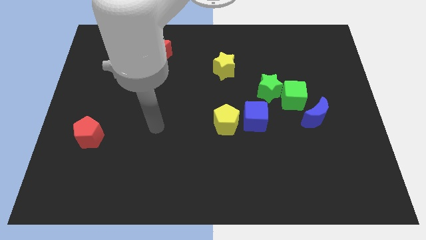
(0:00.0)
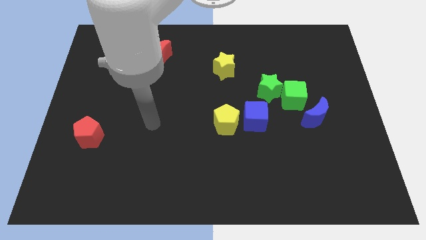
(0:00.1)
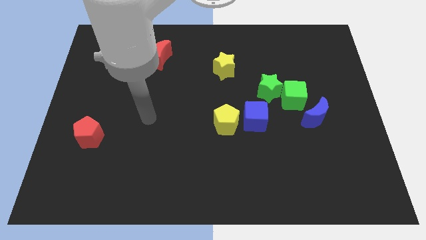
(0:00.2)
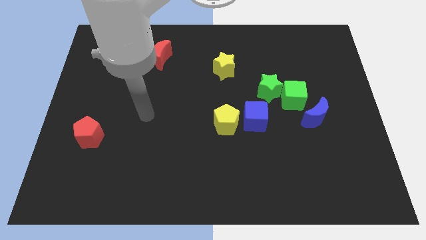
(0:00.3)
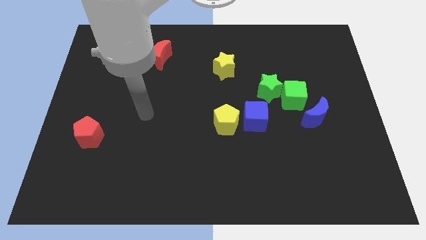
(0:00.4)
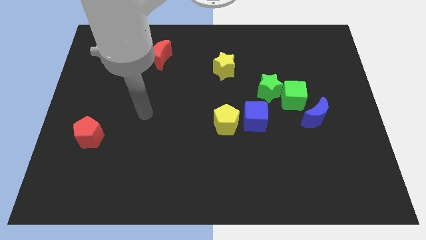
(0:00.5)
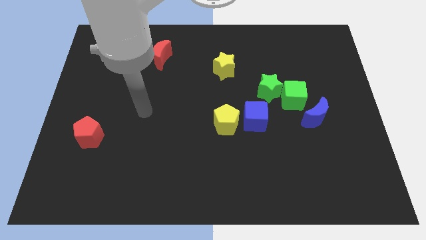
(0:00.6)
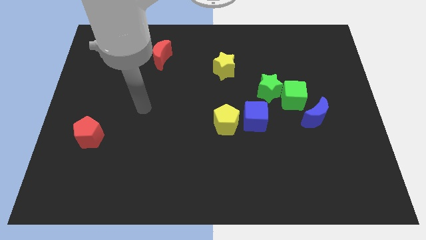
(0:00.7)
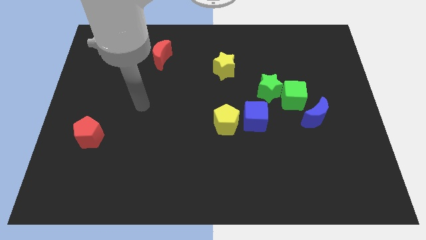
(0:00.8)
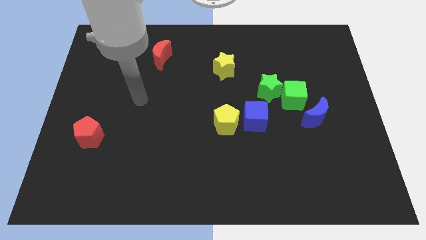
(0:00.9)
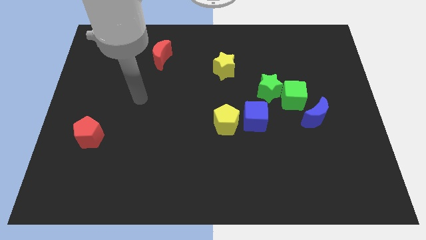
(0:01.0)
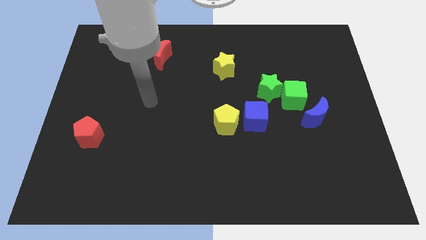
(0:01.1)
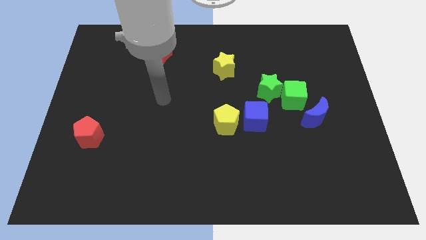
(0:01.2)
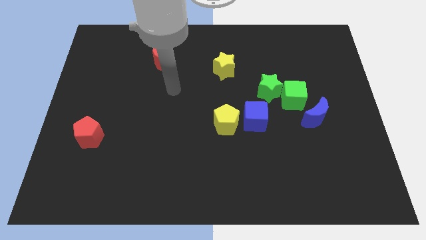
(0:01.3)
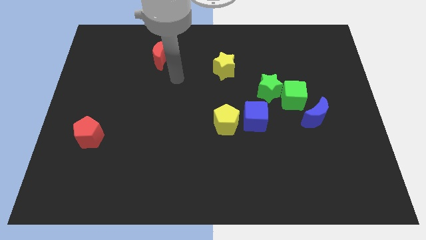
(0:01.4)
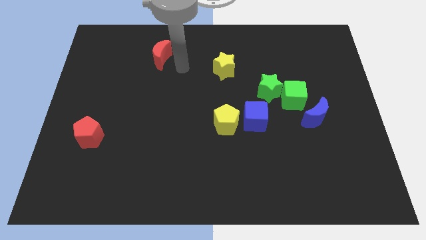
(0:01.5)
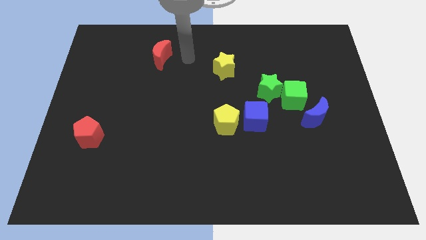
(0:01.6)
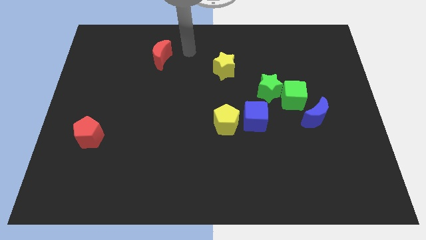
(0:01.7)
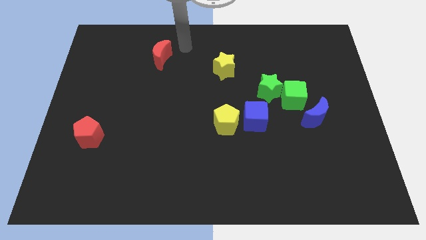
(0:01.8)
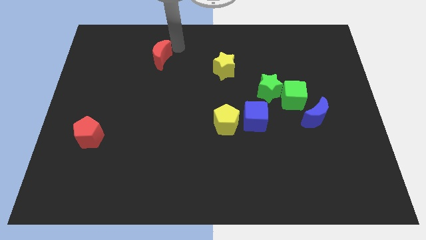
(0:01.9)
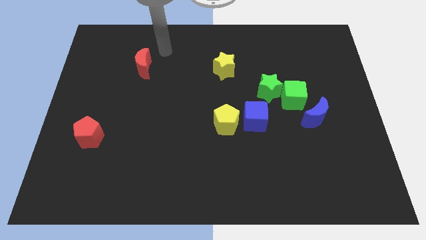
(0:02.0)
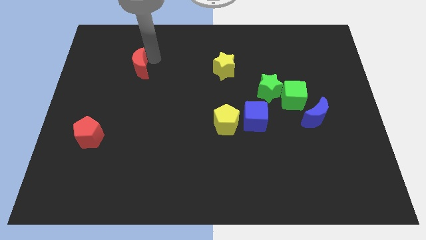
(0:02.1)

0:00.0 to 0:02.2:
move the arm towards the red crescent

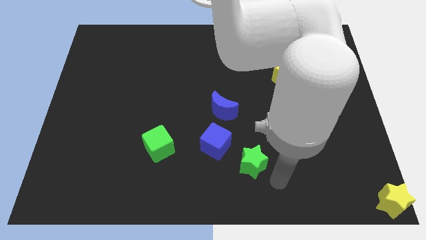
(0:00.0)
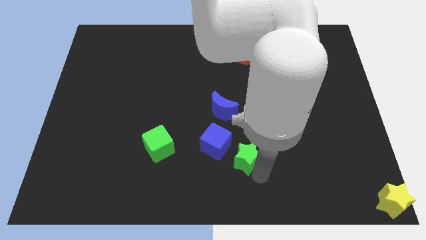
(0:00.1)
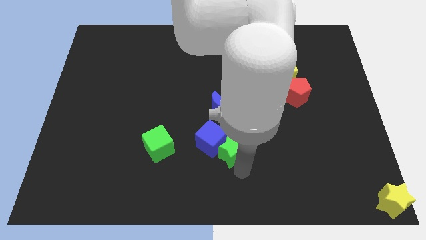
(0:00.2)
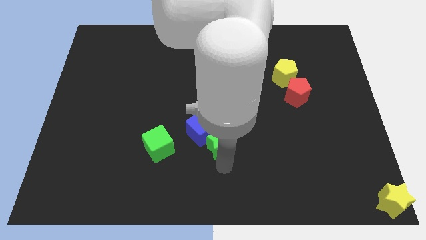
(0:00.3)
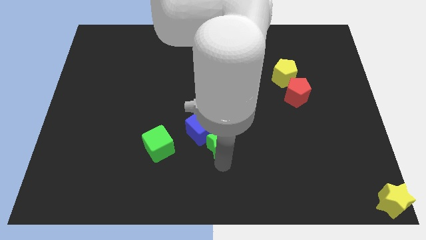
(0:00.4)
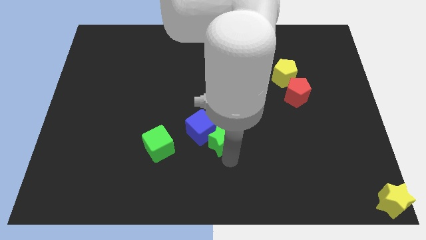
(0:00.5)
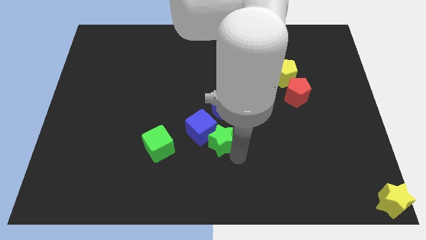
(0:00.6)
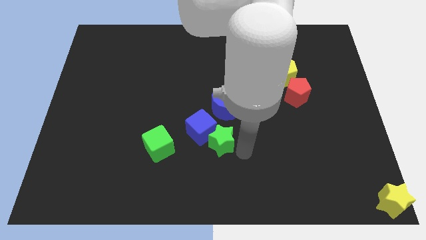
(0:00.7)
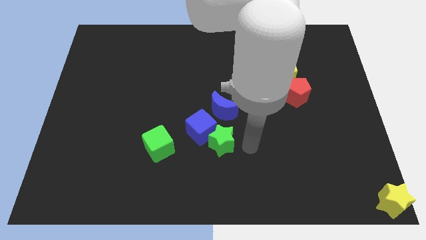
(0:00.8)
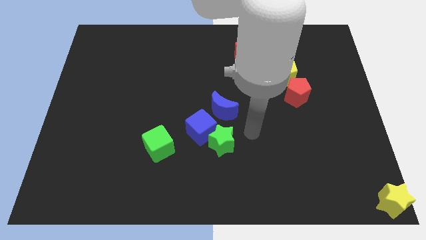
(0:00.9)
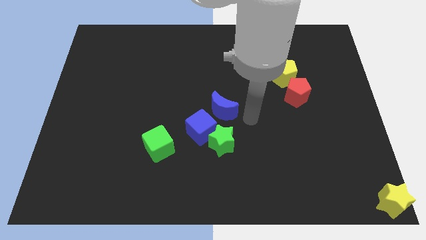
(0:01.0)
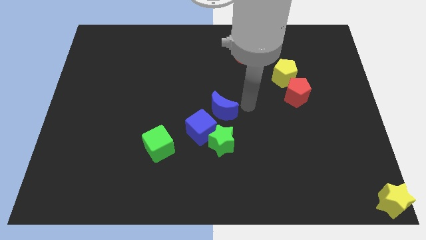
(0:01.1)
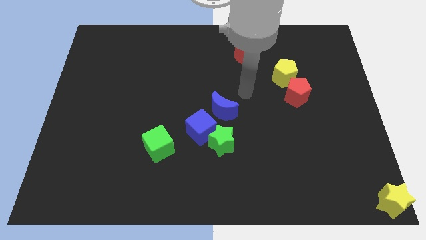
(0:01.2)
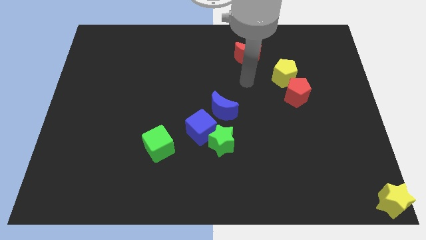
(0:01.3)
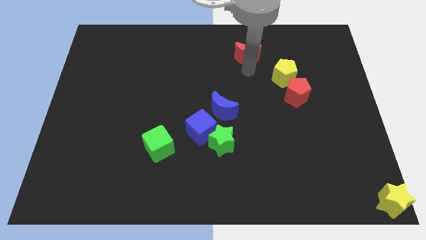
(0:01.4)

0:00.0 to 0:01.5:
push the green star into the blue cube

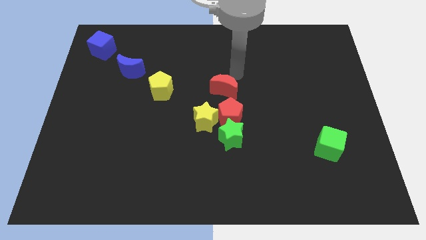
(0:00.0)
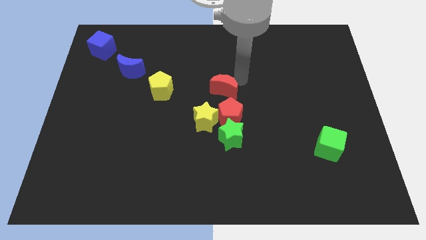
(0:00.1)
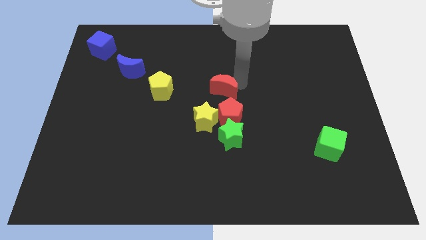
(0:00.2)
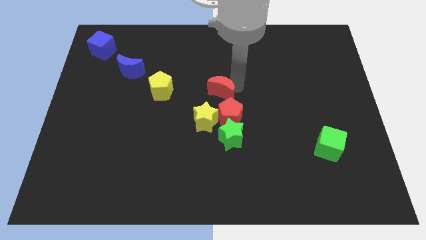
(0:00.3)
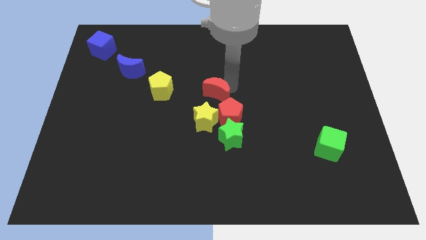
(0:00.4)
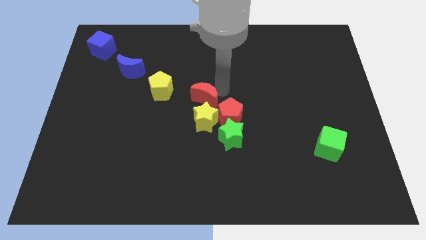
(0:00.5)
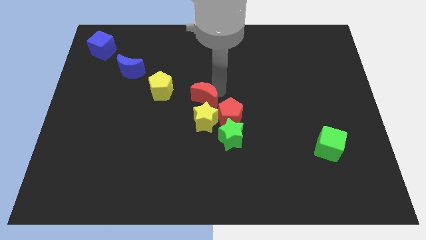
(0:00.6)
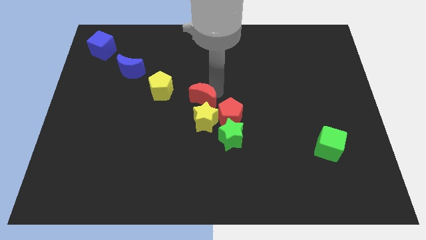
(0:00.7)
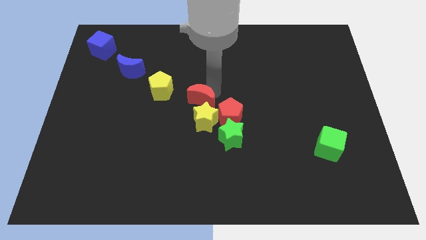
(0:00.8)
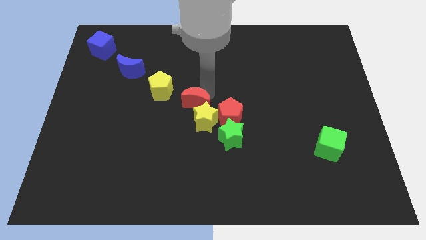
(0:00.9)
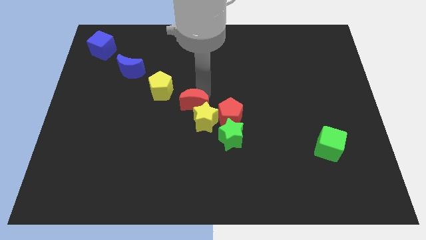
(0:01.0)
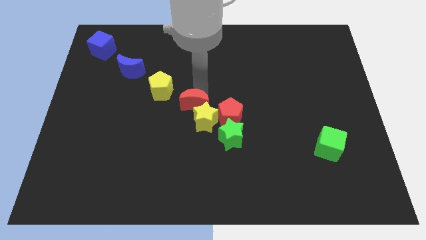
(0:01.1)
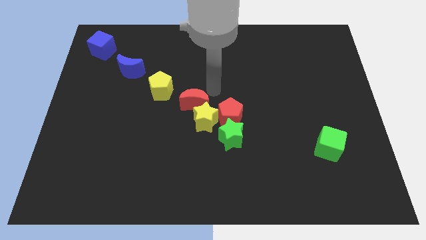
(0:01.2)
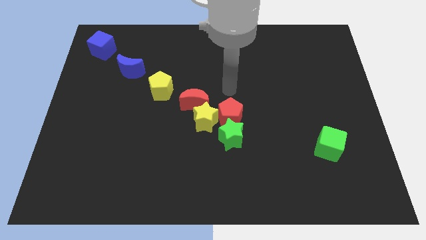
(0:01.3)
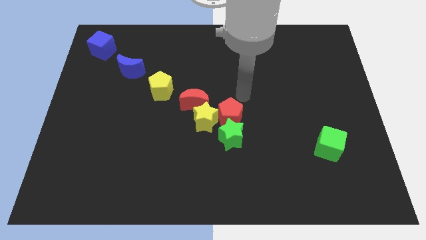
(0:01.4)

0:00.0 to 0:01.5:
move red crescent into the top of yellow star

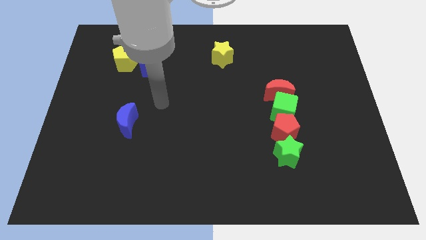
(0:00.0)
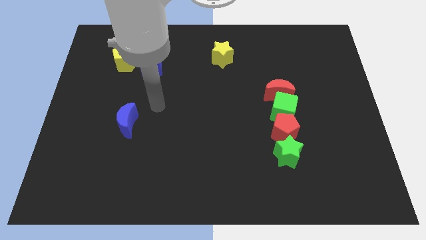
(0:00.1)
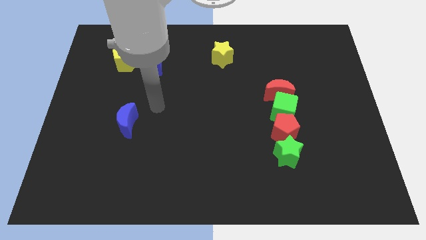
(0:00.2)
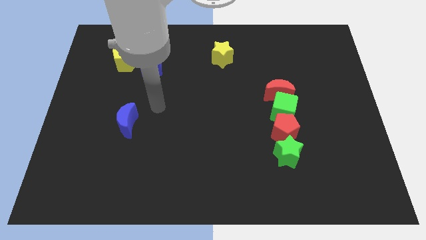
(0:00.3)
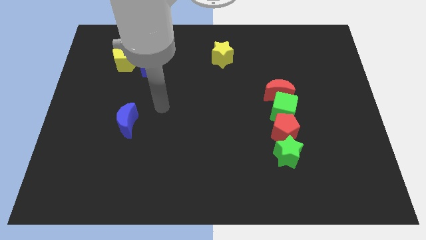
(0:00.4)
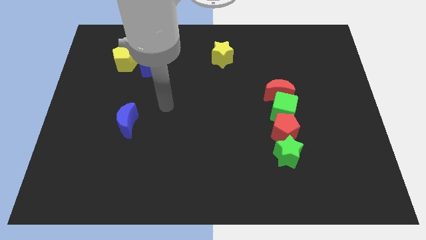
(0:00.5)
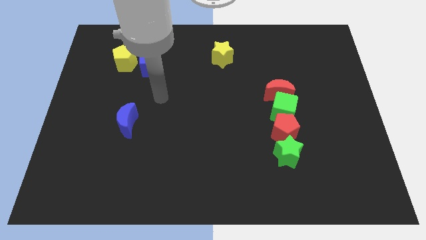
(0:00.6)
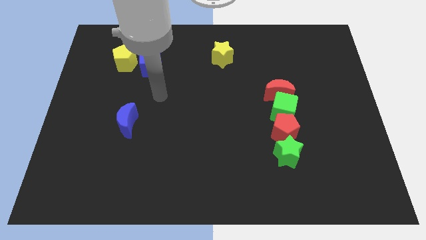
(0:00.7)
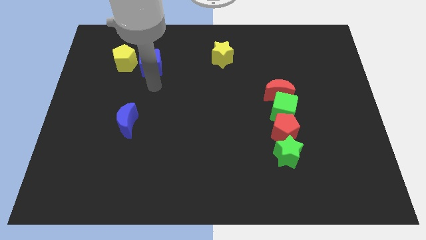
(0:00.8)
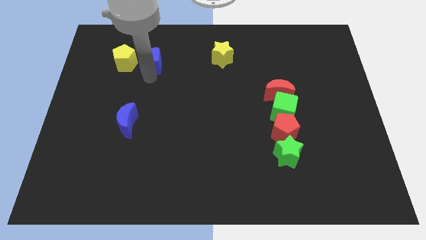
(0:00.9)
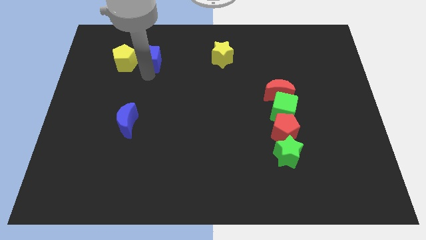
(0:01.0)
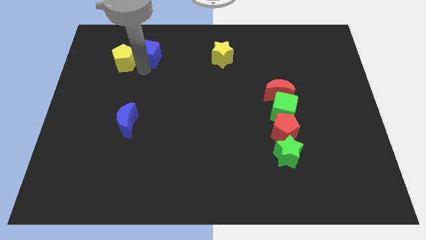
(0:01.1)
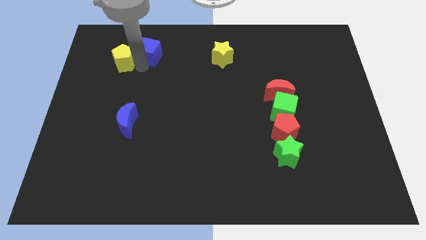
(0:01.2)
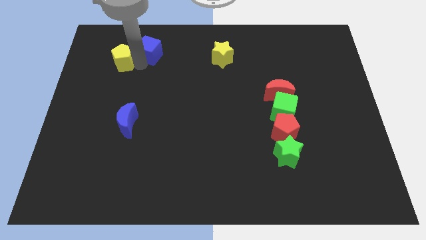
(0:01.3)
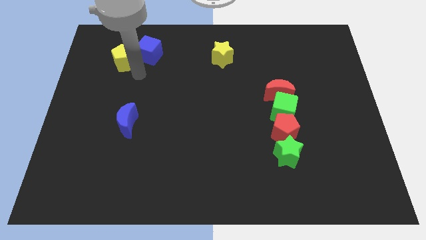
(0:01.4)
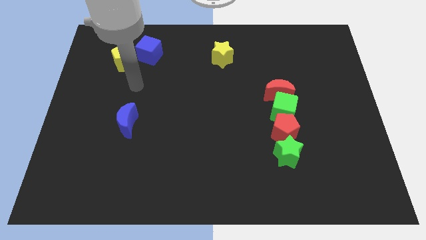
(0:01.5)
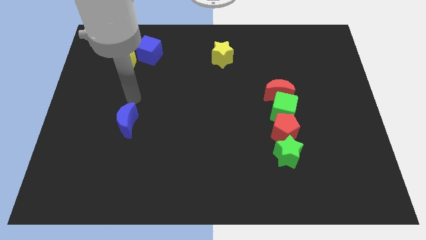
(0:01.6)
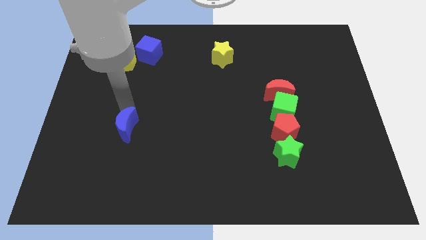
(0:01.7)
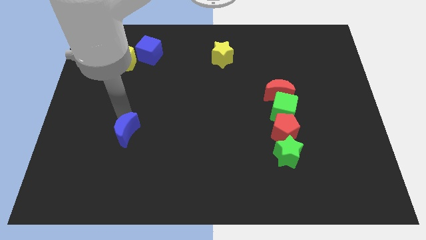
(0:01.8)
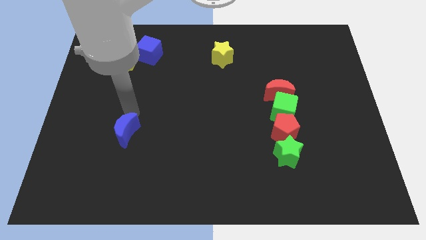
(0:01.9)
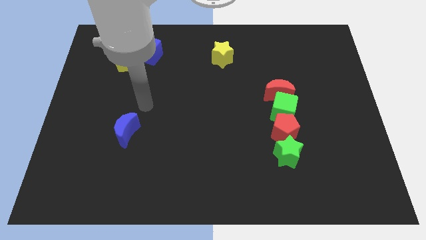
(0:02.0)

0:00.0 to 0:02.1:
push the blue cube slightly upwards

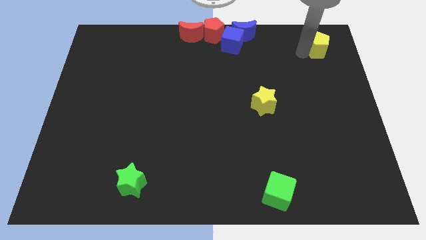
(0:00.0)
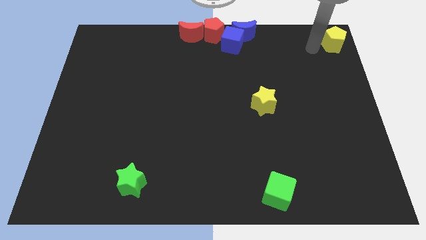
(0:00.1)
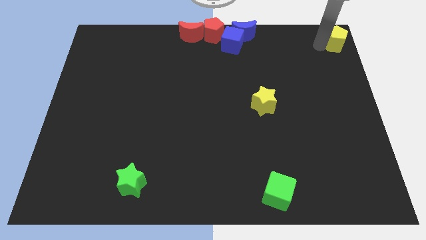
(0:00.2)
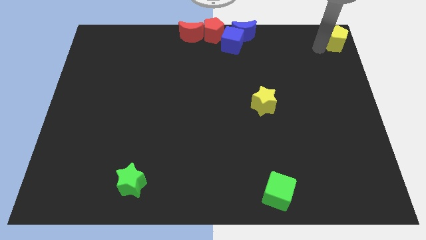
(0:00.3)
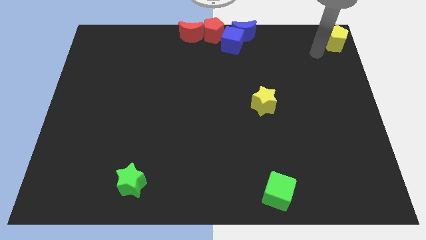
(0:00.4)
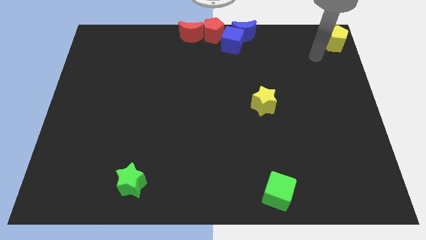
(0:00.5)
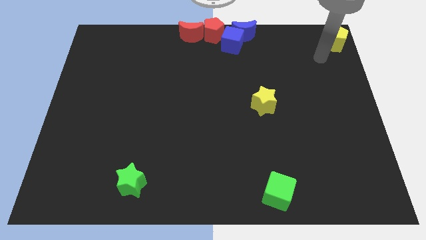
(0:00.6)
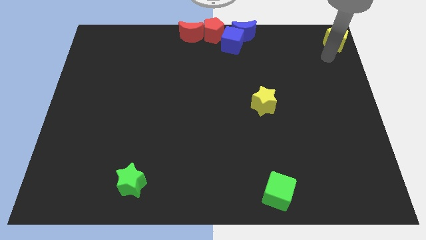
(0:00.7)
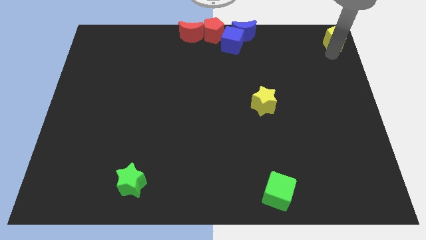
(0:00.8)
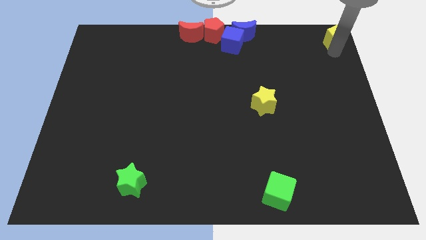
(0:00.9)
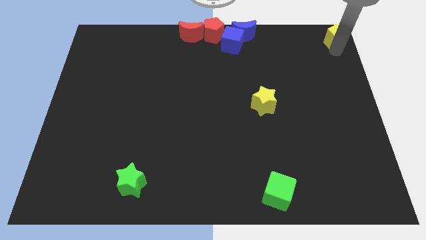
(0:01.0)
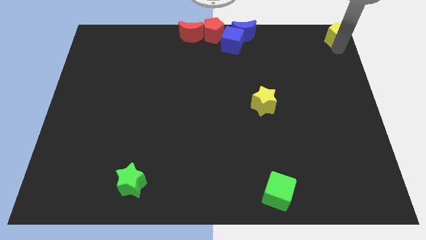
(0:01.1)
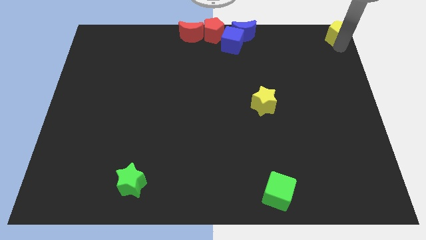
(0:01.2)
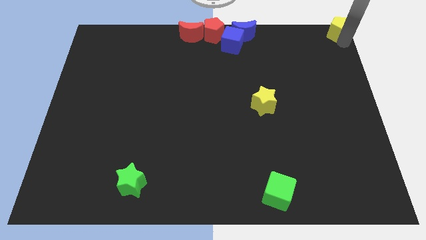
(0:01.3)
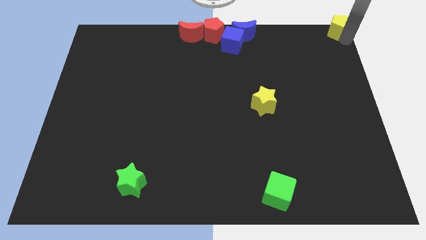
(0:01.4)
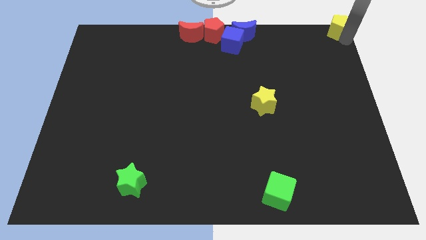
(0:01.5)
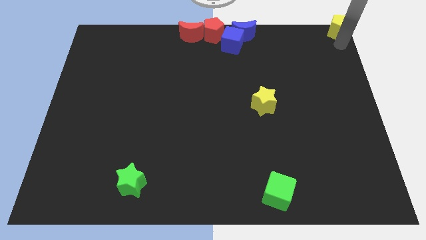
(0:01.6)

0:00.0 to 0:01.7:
move the yellow pentagon to the top right corner of the board
